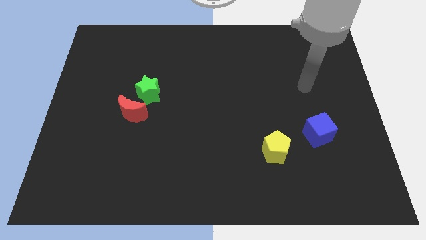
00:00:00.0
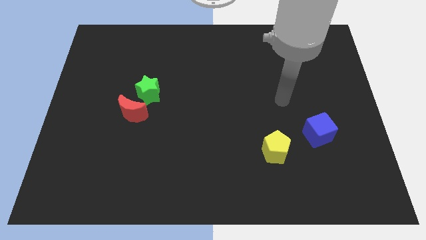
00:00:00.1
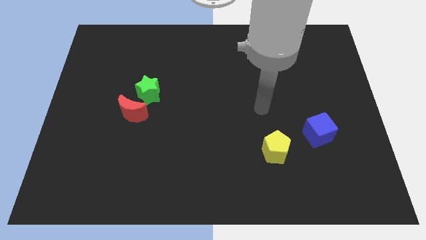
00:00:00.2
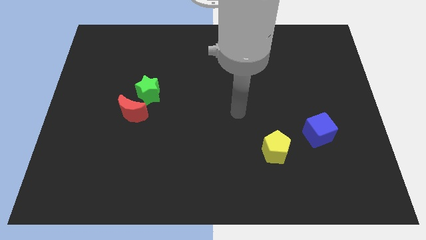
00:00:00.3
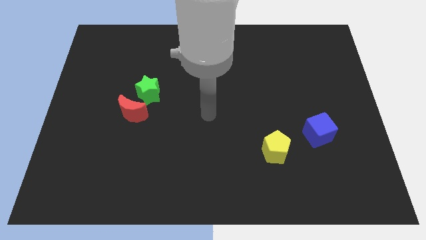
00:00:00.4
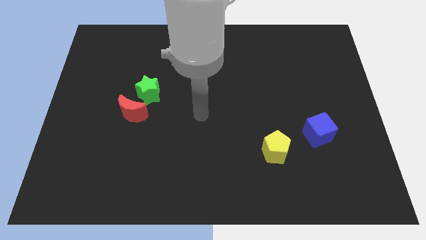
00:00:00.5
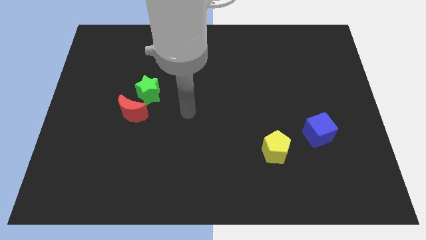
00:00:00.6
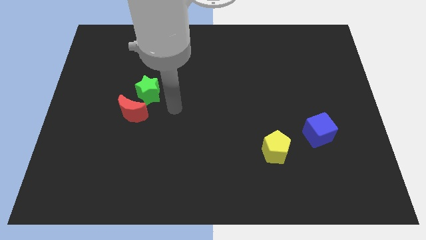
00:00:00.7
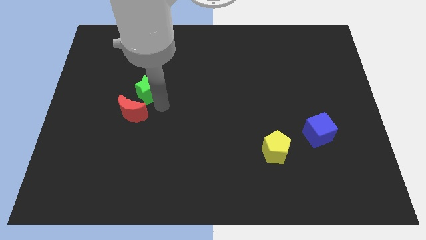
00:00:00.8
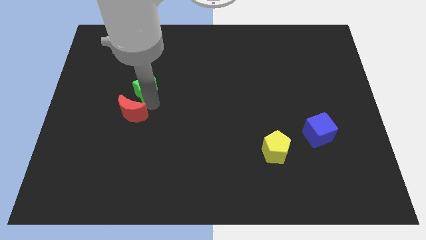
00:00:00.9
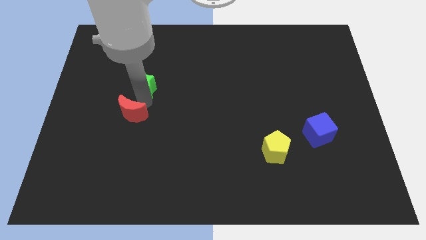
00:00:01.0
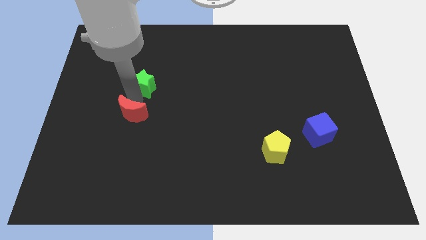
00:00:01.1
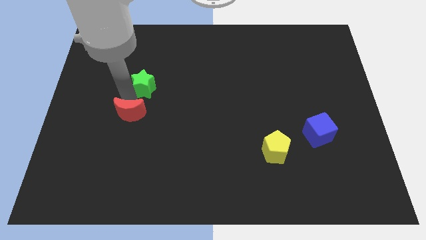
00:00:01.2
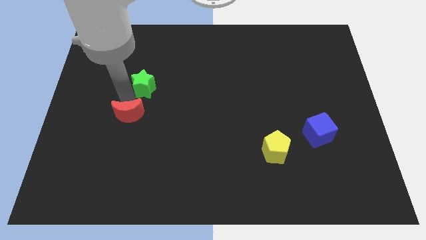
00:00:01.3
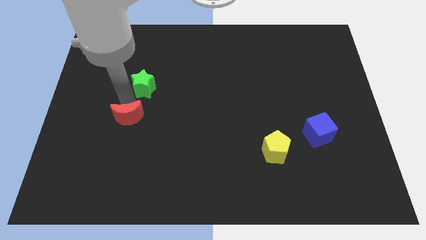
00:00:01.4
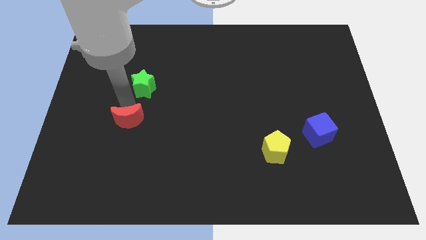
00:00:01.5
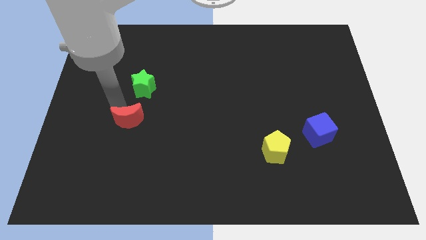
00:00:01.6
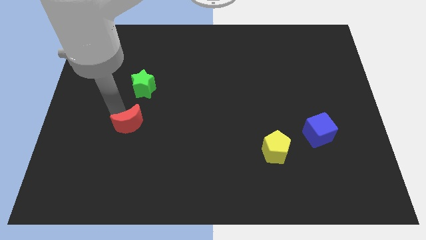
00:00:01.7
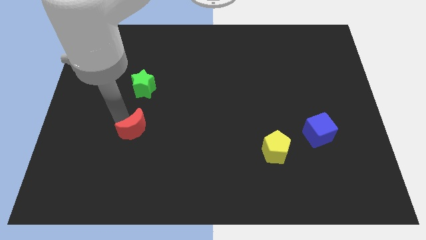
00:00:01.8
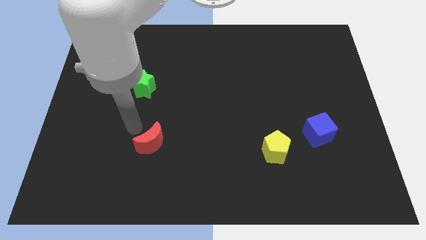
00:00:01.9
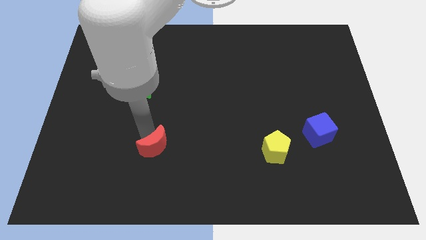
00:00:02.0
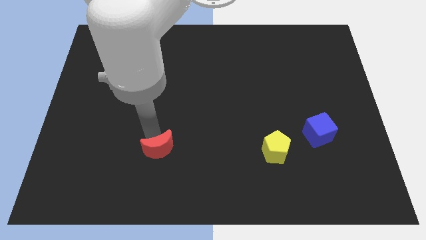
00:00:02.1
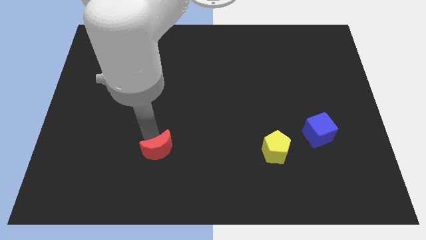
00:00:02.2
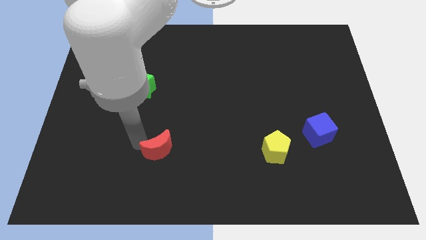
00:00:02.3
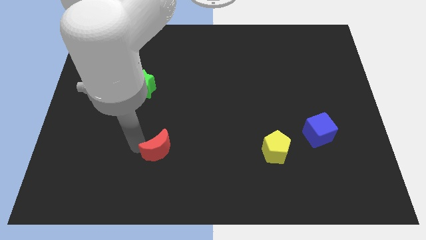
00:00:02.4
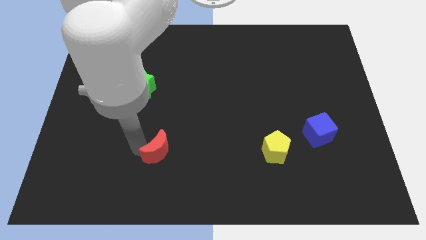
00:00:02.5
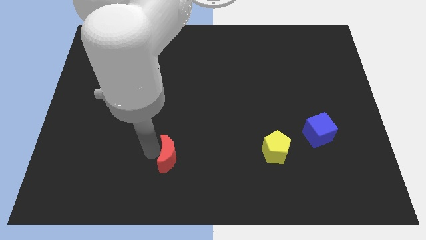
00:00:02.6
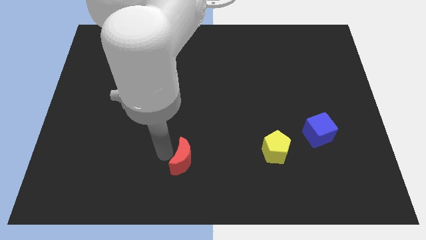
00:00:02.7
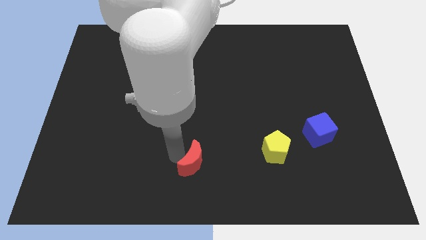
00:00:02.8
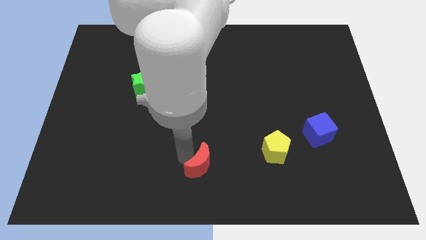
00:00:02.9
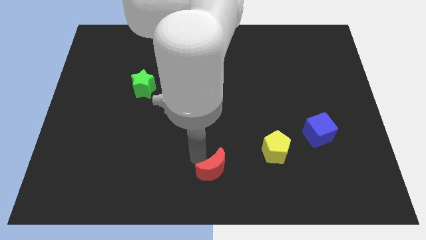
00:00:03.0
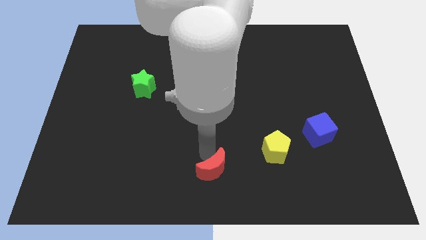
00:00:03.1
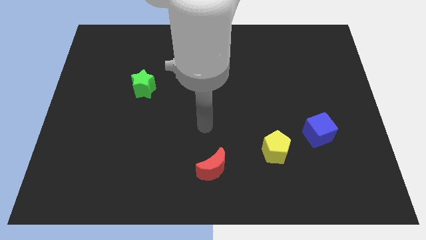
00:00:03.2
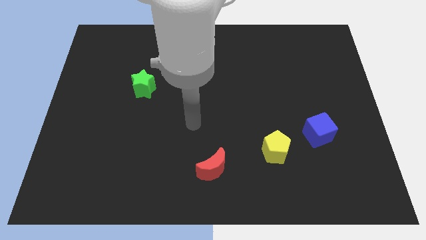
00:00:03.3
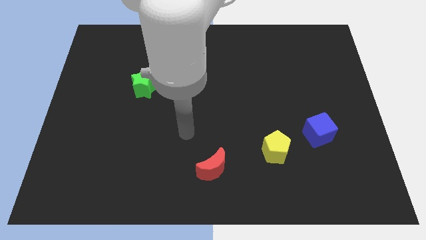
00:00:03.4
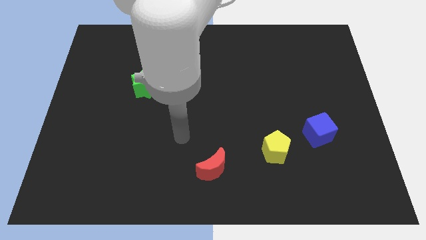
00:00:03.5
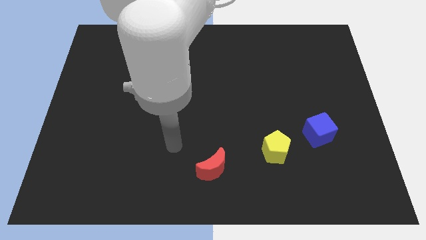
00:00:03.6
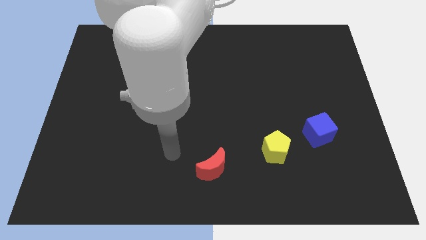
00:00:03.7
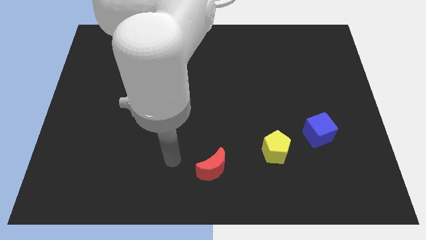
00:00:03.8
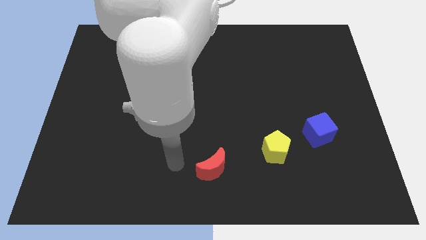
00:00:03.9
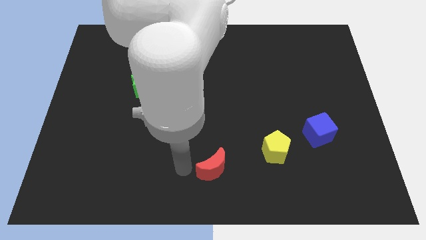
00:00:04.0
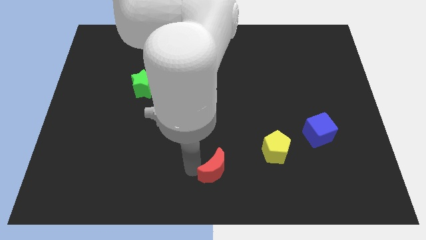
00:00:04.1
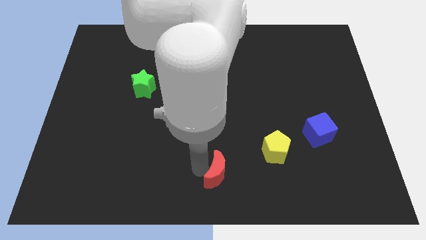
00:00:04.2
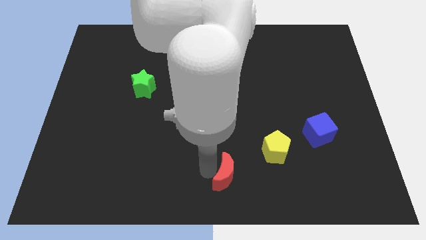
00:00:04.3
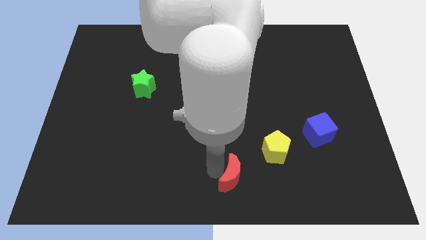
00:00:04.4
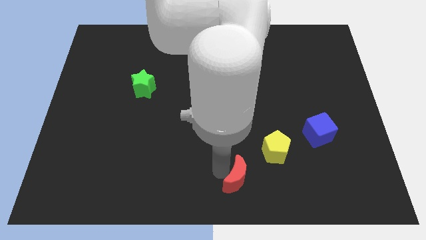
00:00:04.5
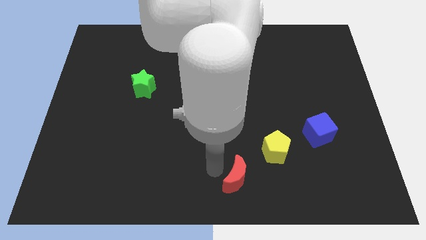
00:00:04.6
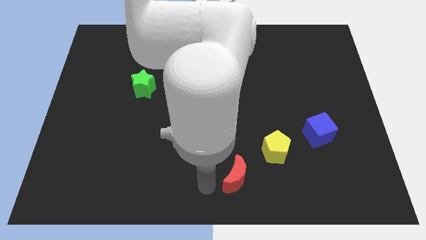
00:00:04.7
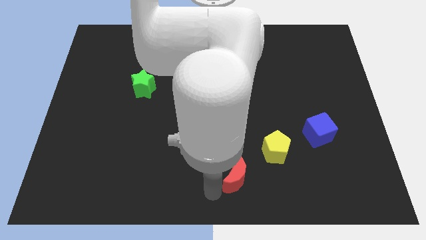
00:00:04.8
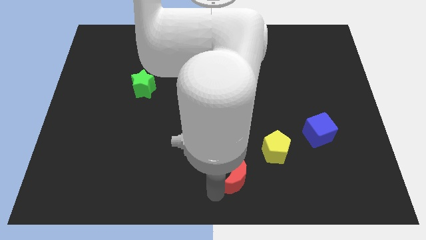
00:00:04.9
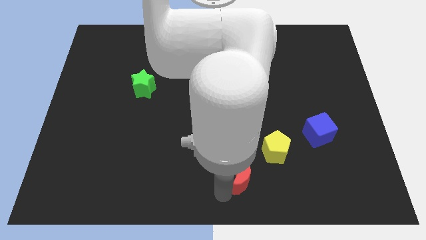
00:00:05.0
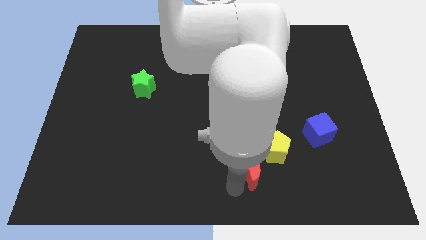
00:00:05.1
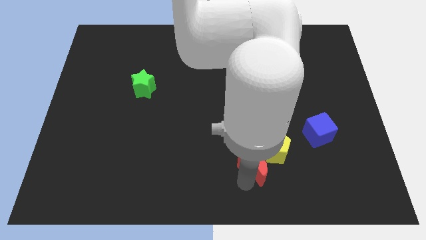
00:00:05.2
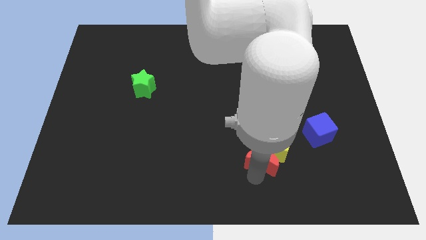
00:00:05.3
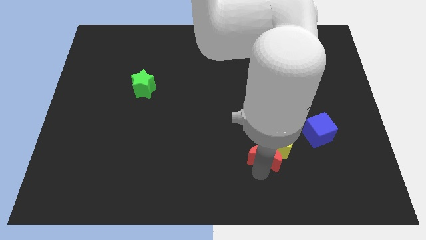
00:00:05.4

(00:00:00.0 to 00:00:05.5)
move the moon close to the pentagon

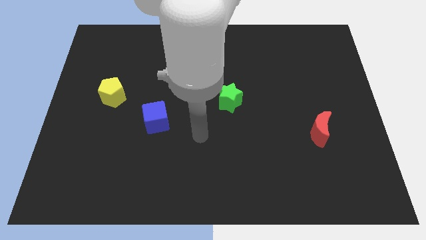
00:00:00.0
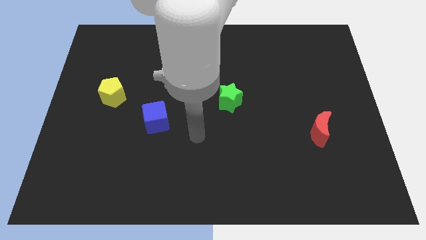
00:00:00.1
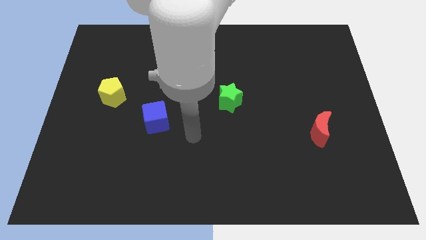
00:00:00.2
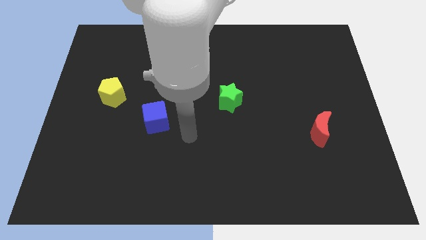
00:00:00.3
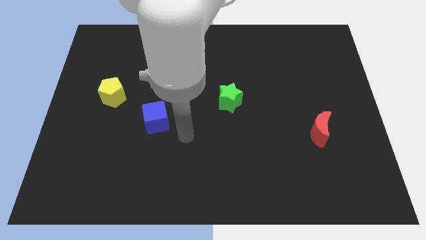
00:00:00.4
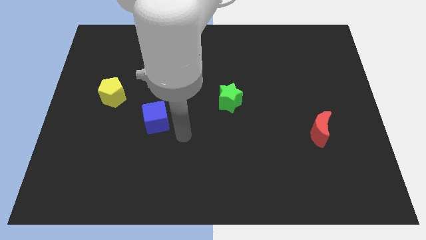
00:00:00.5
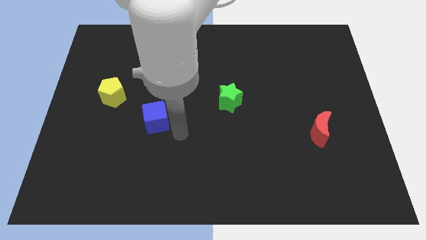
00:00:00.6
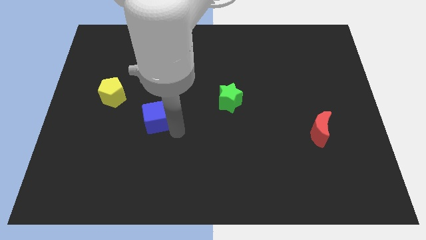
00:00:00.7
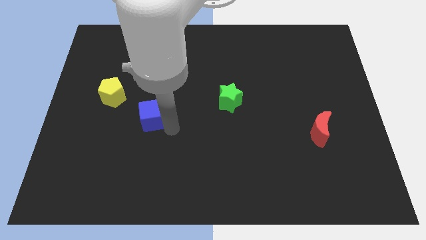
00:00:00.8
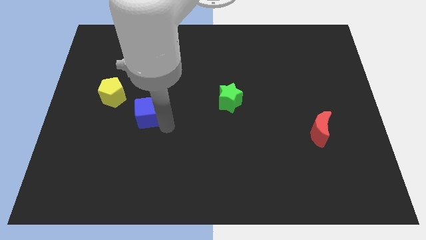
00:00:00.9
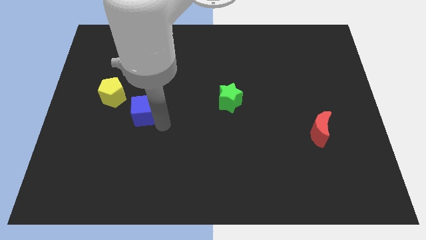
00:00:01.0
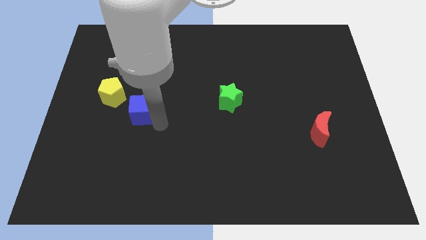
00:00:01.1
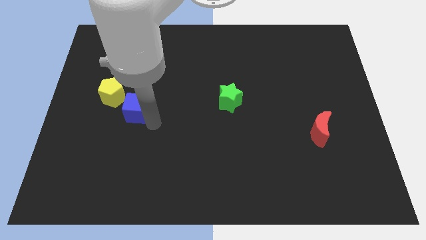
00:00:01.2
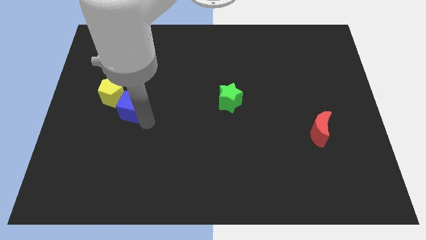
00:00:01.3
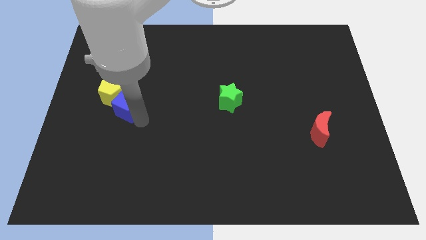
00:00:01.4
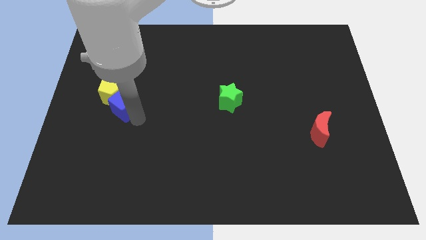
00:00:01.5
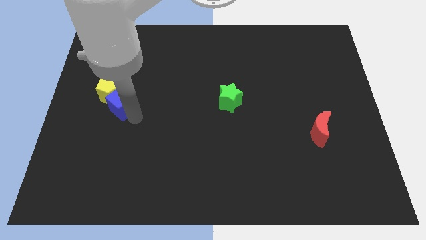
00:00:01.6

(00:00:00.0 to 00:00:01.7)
slide the blue cube to the yellow block

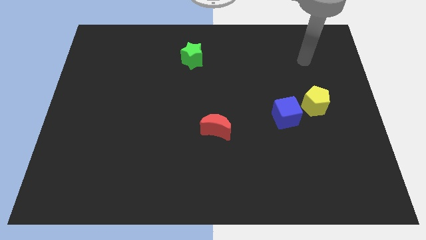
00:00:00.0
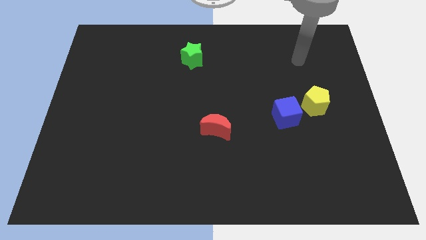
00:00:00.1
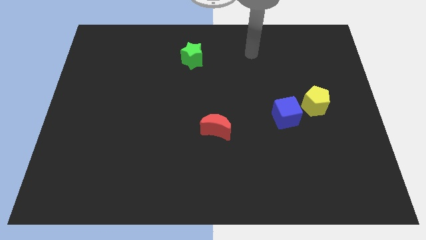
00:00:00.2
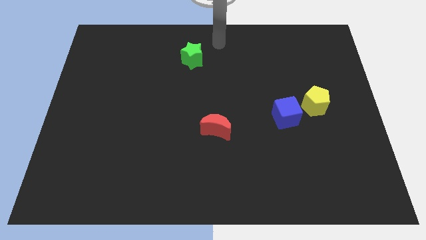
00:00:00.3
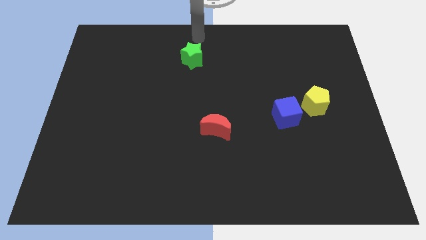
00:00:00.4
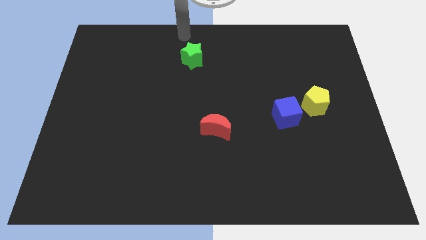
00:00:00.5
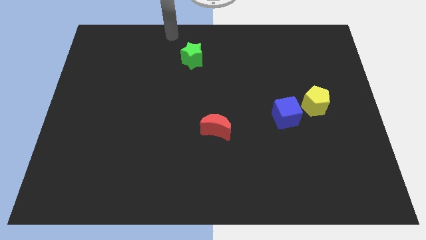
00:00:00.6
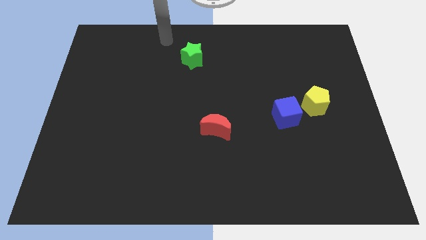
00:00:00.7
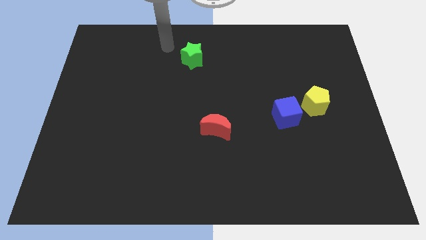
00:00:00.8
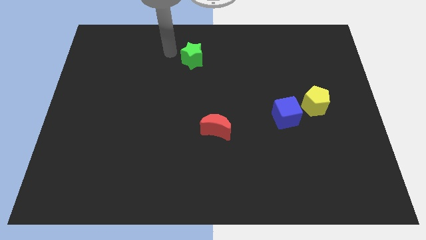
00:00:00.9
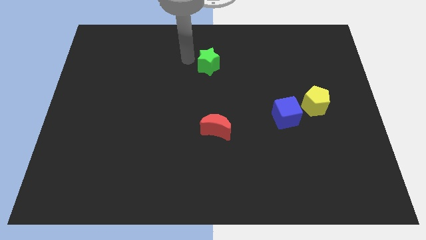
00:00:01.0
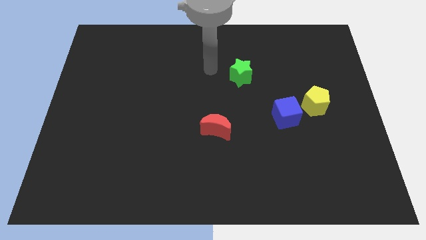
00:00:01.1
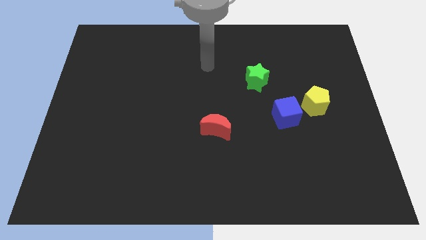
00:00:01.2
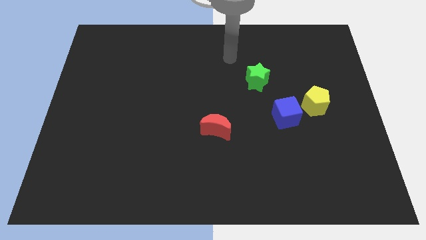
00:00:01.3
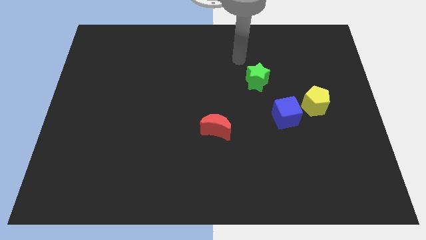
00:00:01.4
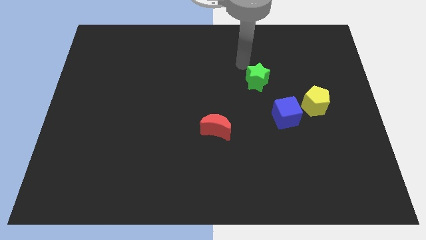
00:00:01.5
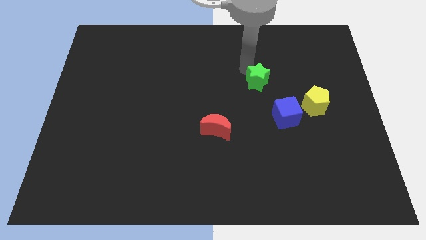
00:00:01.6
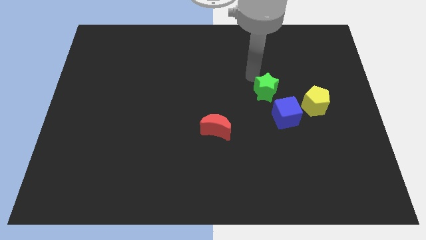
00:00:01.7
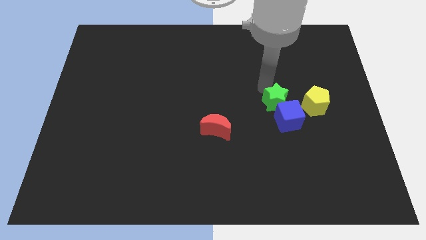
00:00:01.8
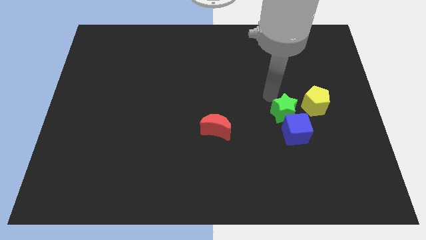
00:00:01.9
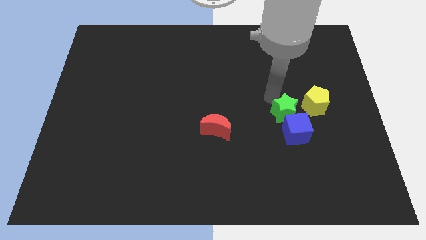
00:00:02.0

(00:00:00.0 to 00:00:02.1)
push the green star to the blue block
